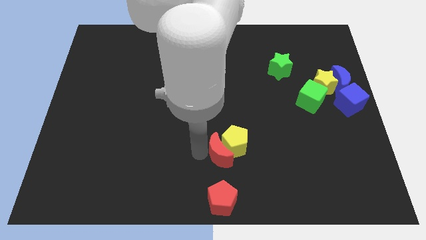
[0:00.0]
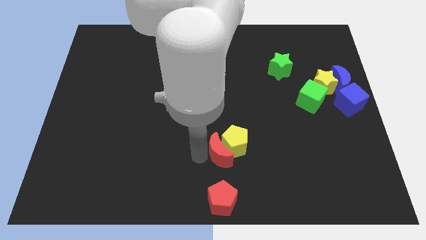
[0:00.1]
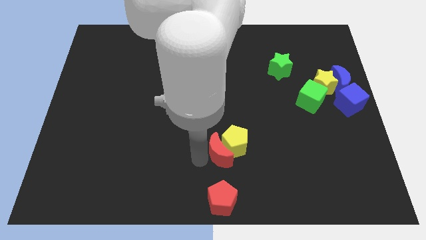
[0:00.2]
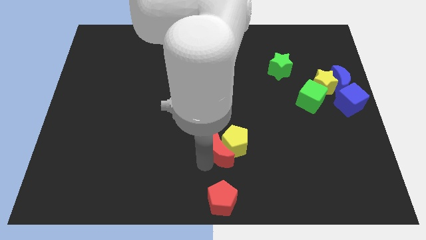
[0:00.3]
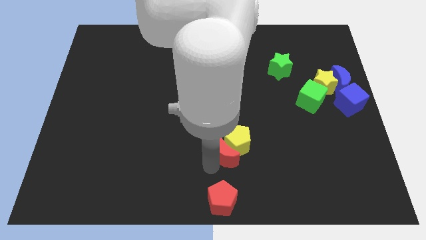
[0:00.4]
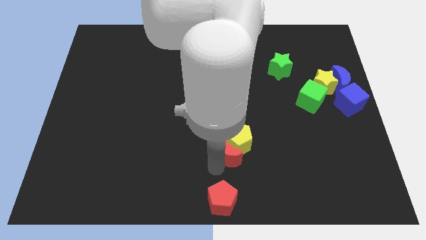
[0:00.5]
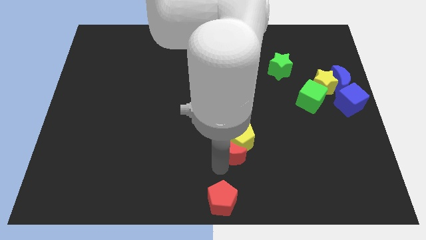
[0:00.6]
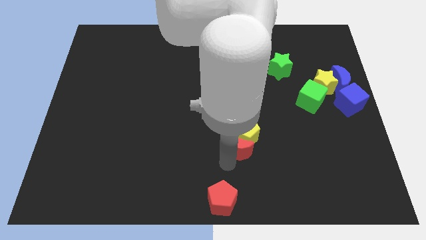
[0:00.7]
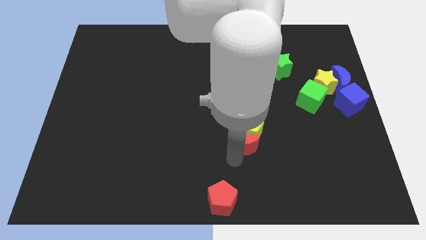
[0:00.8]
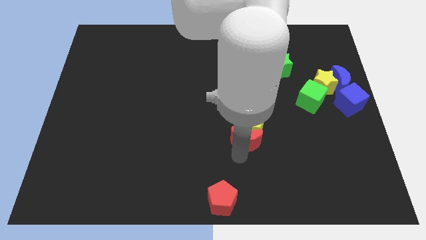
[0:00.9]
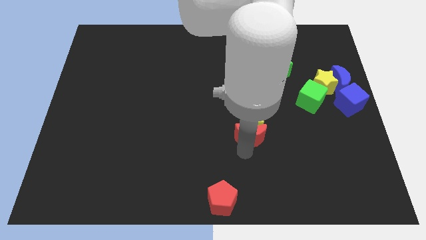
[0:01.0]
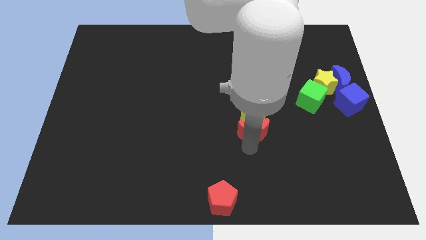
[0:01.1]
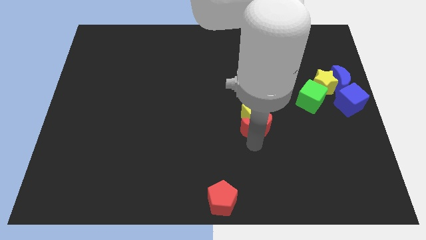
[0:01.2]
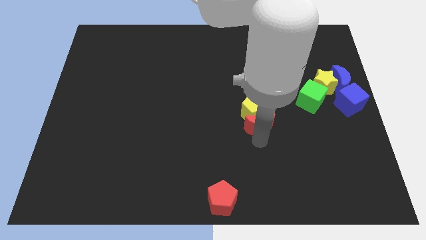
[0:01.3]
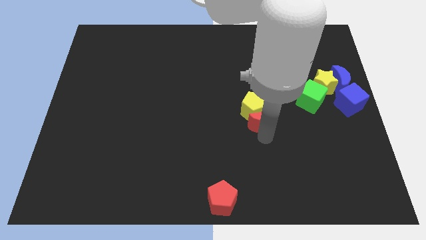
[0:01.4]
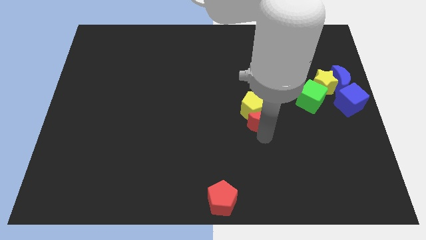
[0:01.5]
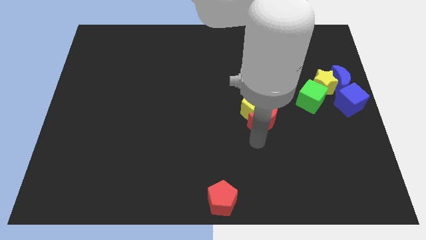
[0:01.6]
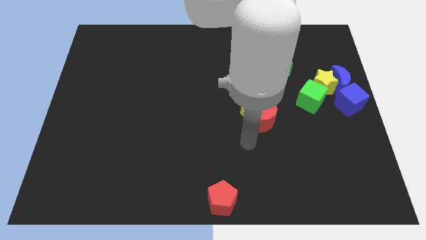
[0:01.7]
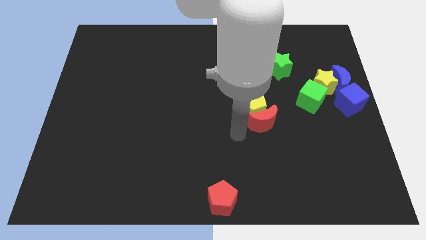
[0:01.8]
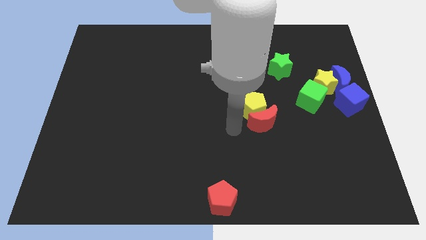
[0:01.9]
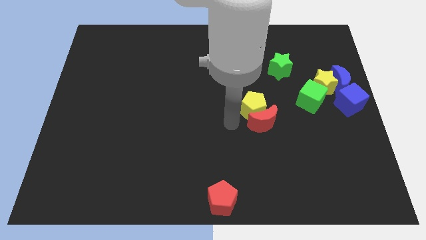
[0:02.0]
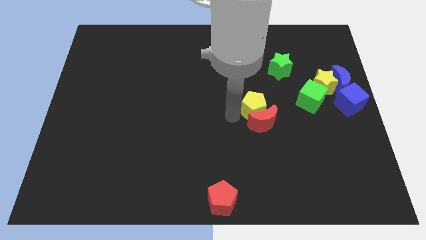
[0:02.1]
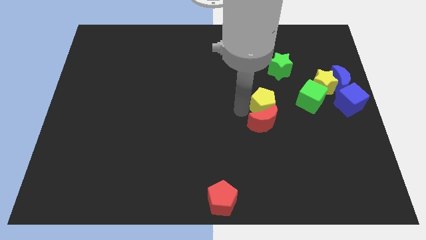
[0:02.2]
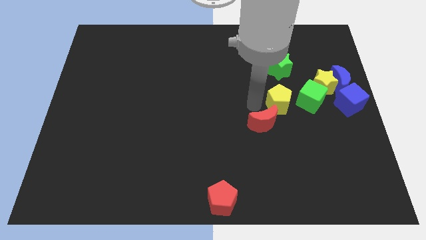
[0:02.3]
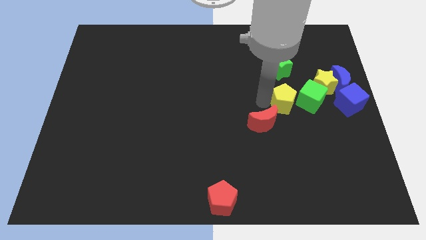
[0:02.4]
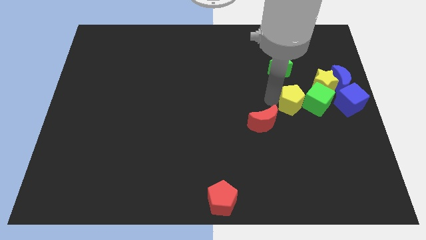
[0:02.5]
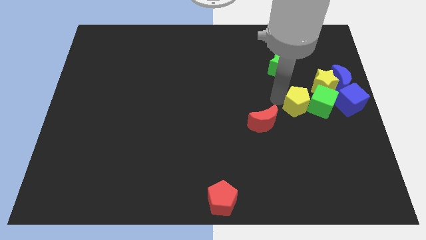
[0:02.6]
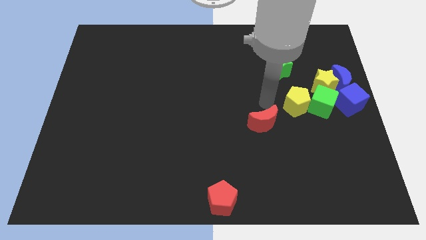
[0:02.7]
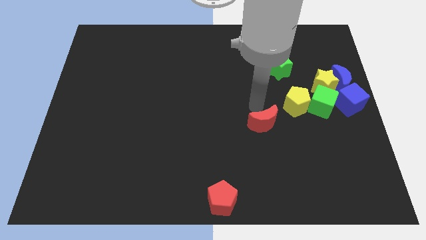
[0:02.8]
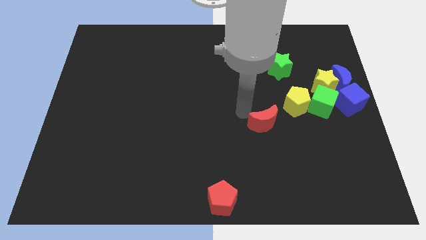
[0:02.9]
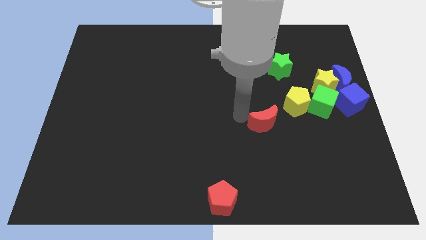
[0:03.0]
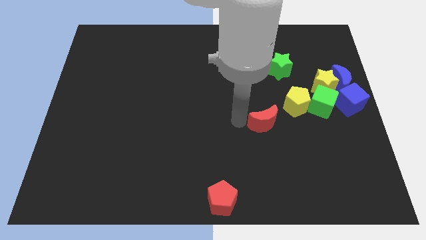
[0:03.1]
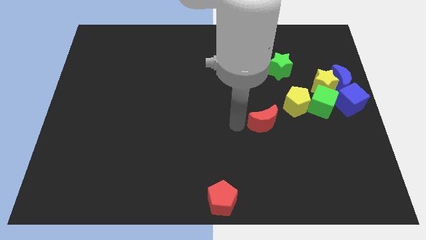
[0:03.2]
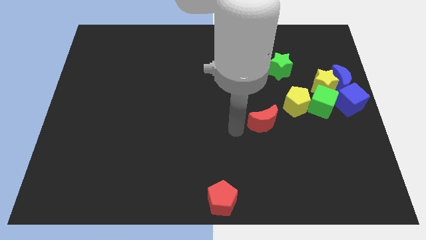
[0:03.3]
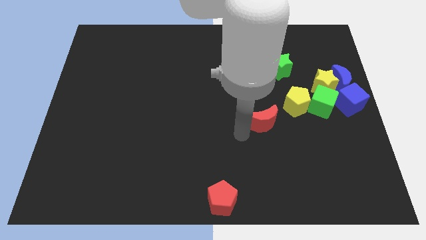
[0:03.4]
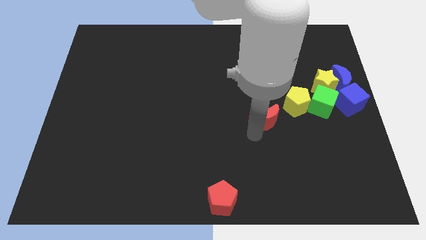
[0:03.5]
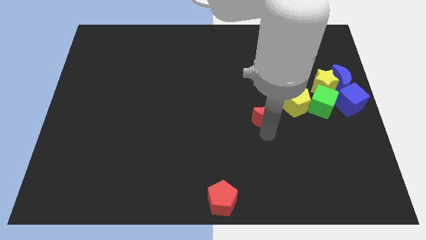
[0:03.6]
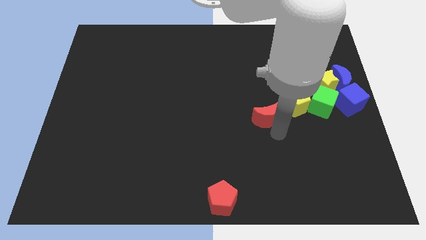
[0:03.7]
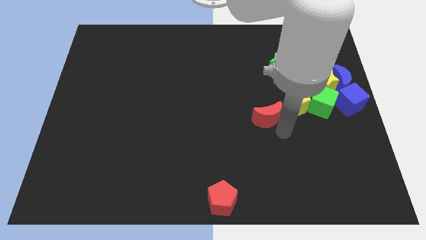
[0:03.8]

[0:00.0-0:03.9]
slide the yellow pentagon with red moon towards green cube

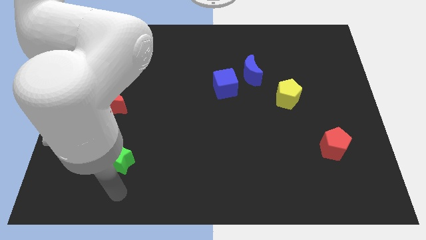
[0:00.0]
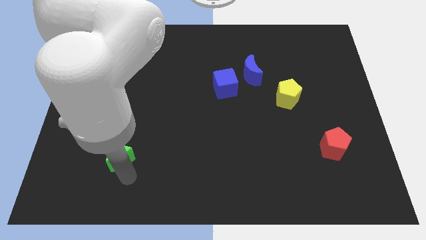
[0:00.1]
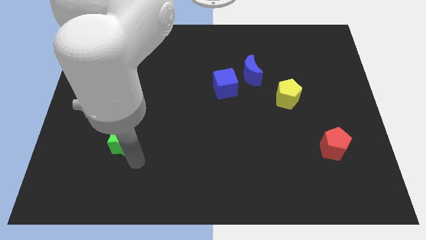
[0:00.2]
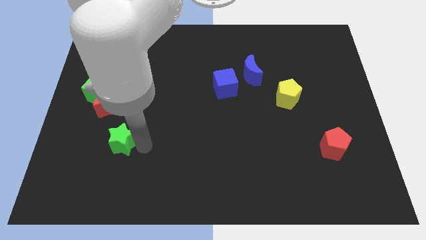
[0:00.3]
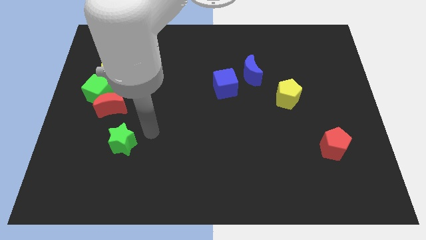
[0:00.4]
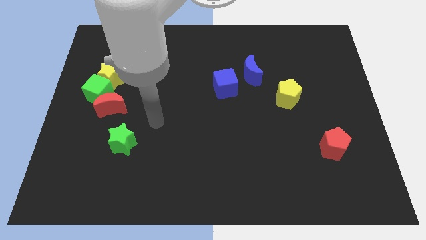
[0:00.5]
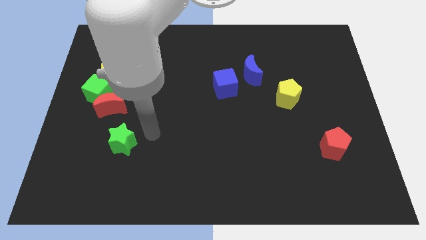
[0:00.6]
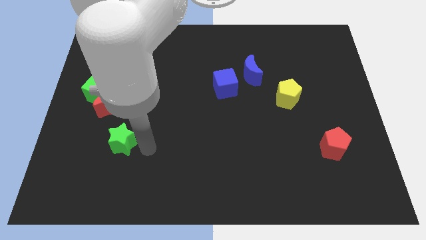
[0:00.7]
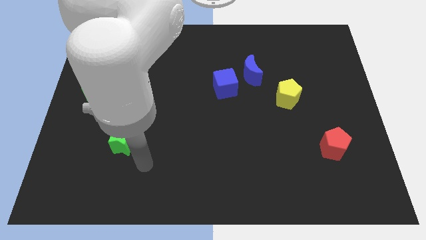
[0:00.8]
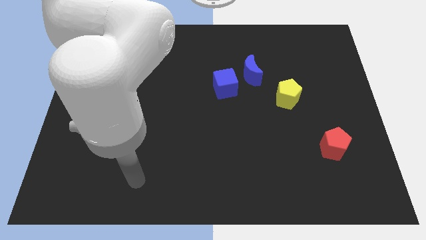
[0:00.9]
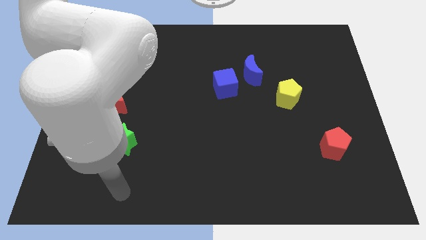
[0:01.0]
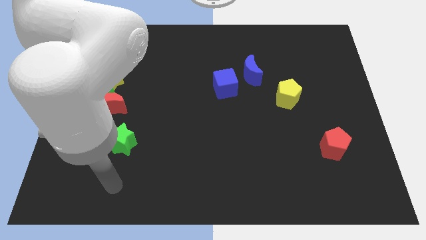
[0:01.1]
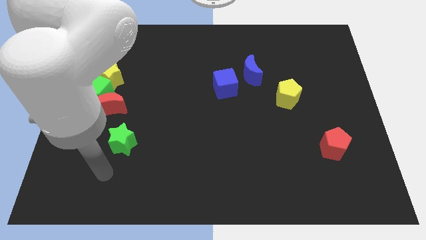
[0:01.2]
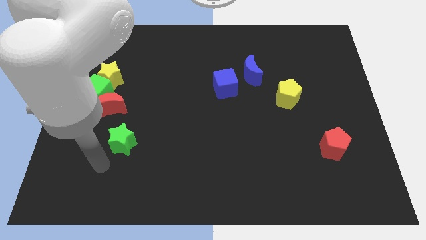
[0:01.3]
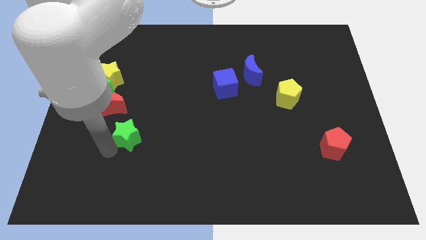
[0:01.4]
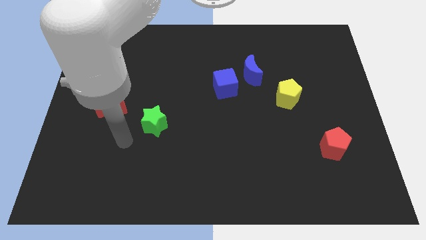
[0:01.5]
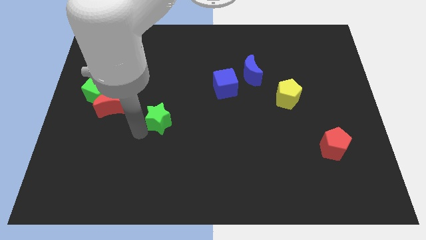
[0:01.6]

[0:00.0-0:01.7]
move the green star to the center of board

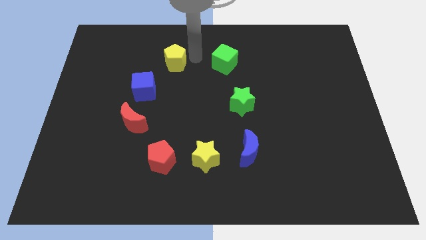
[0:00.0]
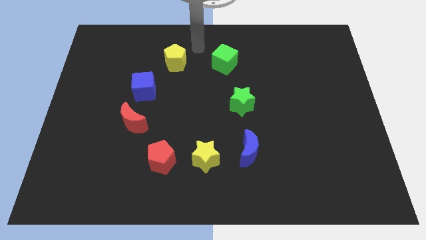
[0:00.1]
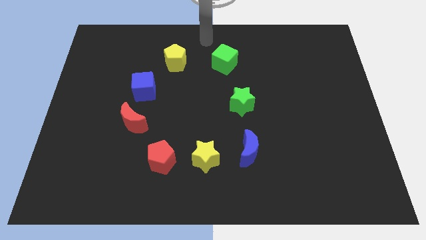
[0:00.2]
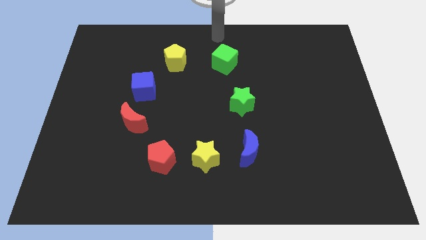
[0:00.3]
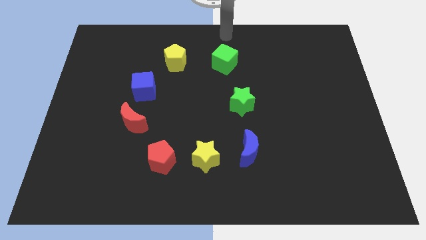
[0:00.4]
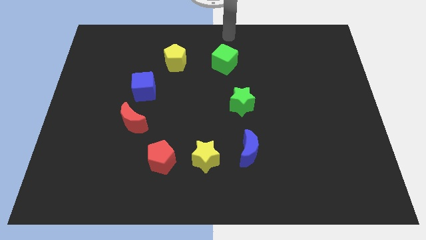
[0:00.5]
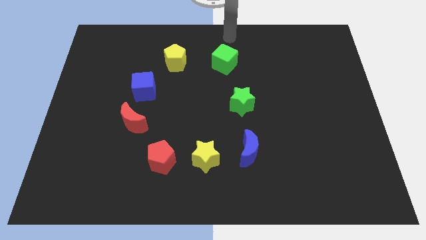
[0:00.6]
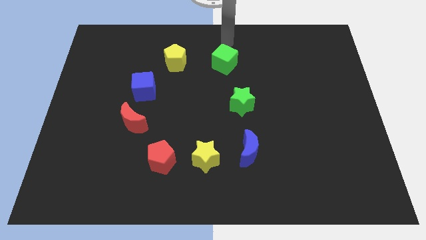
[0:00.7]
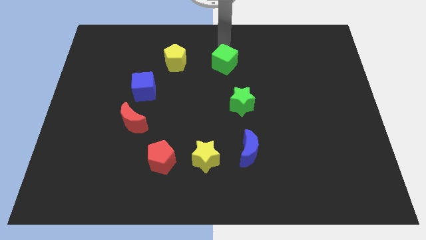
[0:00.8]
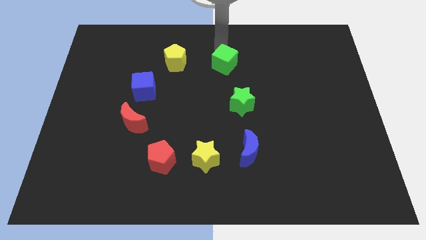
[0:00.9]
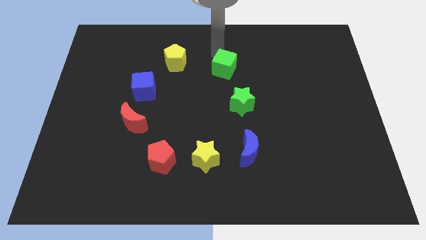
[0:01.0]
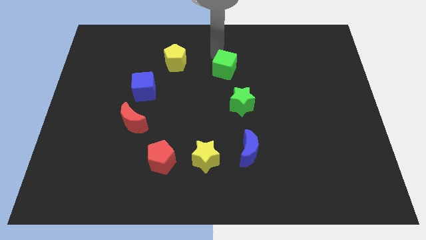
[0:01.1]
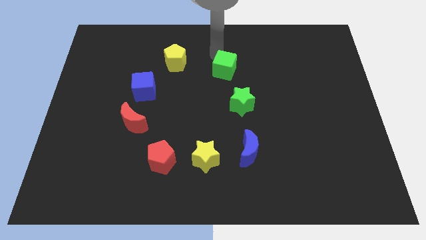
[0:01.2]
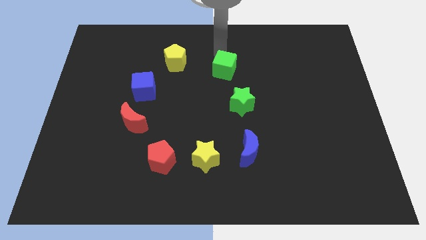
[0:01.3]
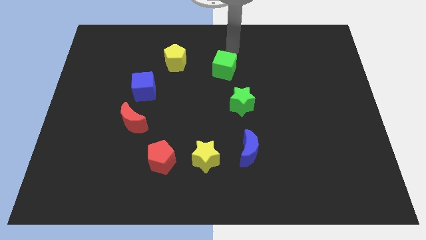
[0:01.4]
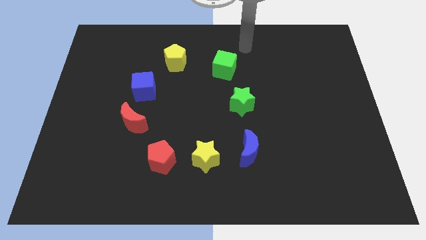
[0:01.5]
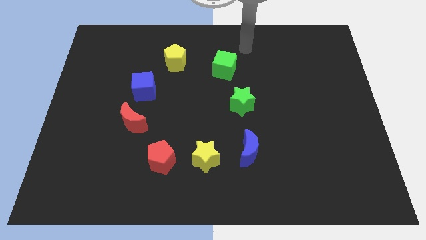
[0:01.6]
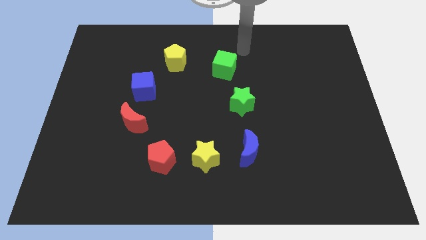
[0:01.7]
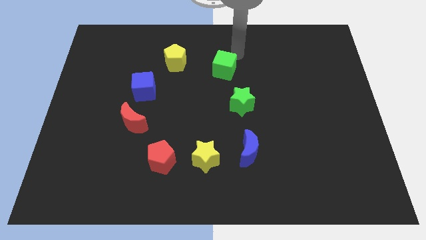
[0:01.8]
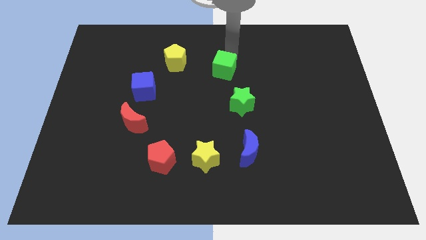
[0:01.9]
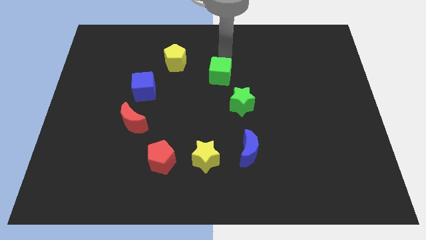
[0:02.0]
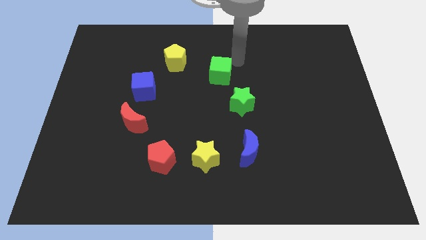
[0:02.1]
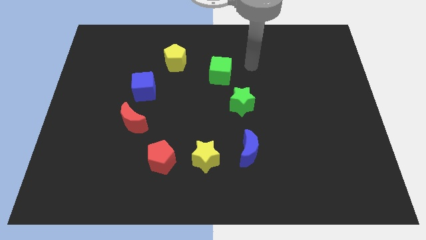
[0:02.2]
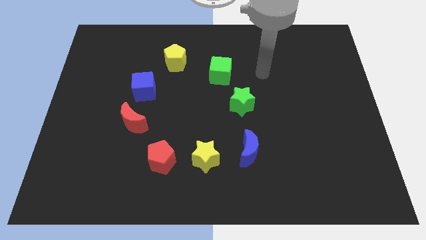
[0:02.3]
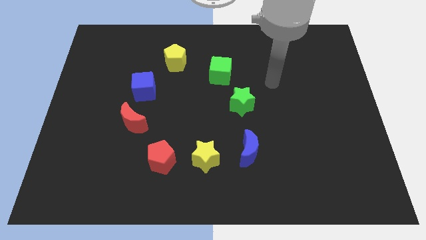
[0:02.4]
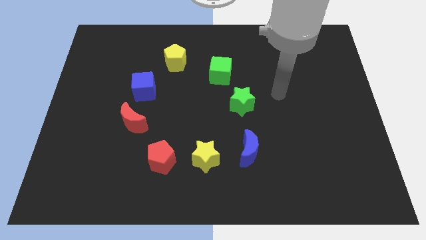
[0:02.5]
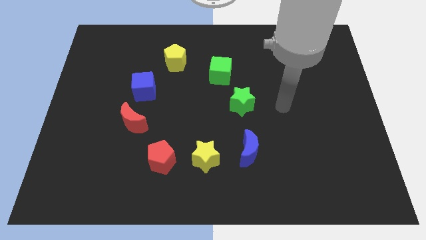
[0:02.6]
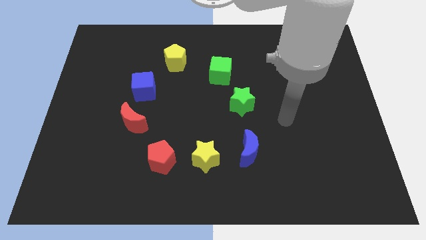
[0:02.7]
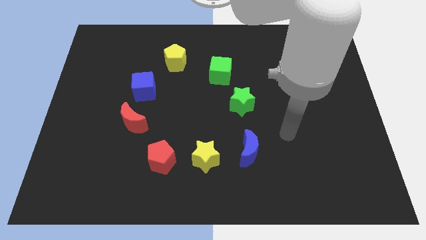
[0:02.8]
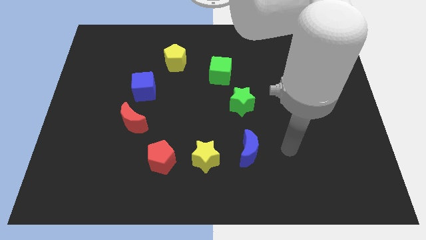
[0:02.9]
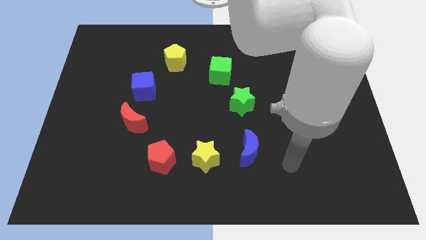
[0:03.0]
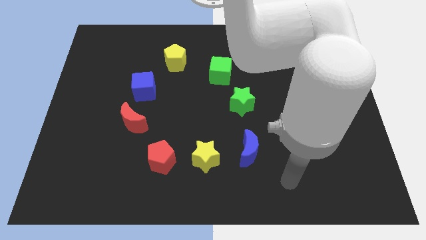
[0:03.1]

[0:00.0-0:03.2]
push the green cube slightly downward

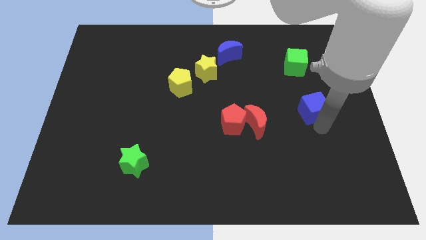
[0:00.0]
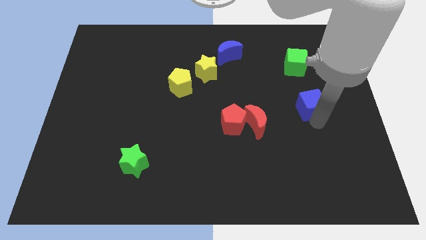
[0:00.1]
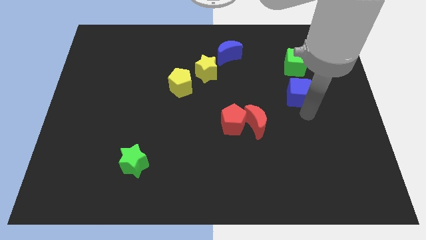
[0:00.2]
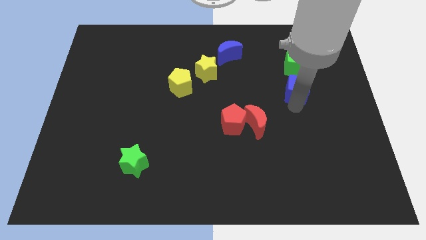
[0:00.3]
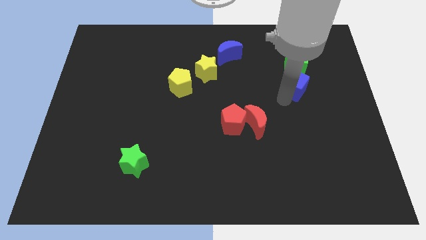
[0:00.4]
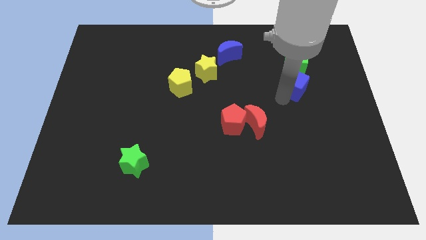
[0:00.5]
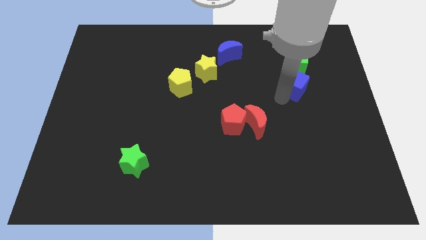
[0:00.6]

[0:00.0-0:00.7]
move the blue cube below the green cube
